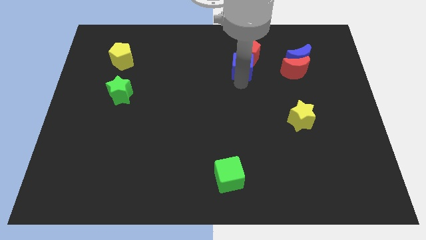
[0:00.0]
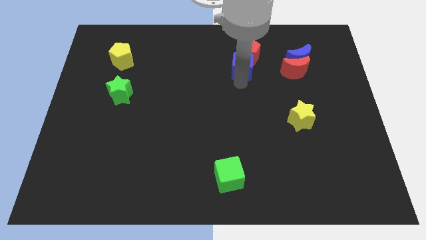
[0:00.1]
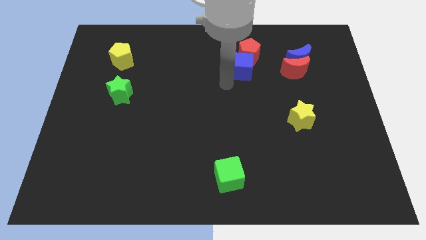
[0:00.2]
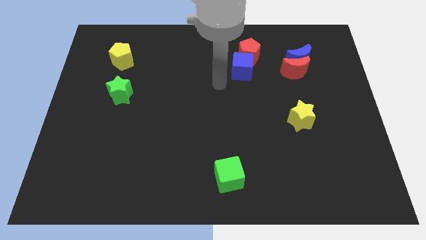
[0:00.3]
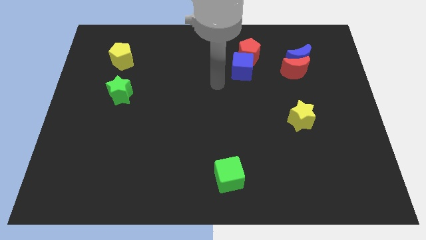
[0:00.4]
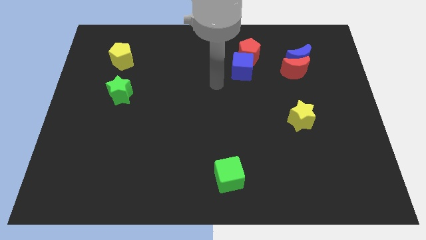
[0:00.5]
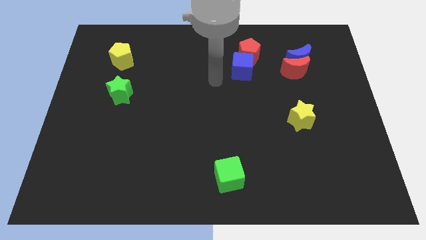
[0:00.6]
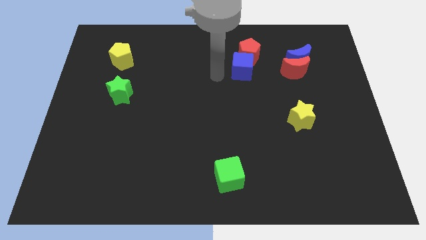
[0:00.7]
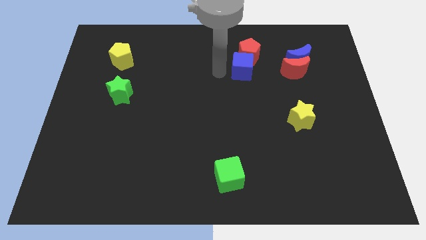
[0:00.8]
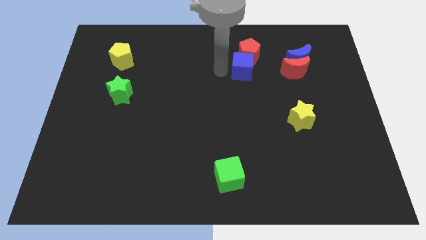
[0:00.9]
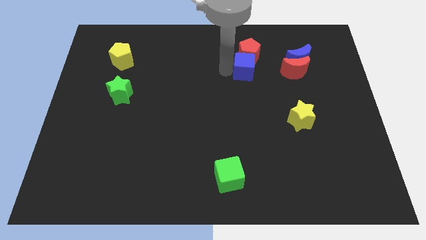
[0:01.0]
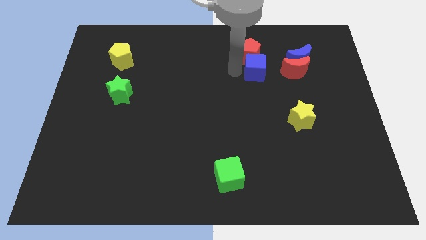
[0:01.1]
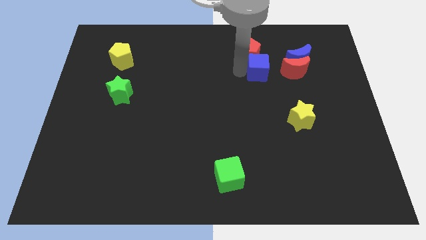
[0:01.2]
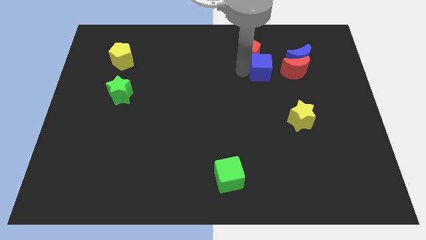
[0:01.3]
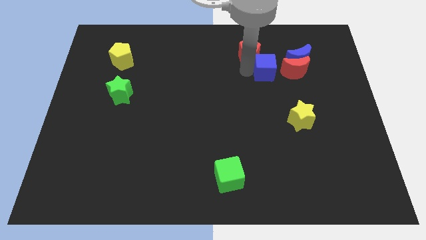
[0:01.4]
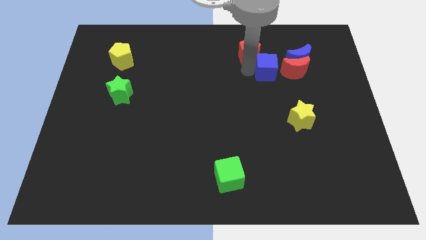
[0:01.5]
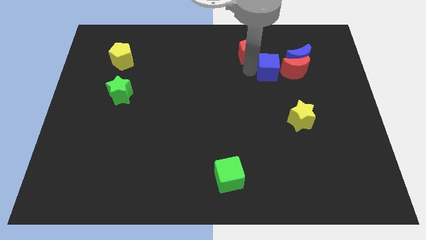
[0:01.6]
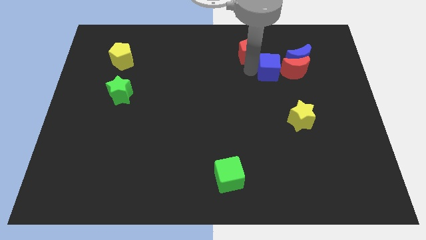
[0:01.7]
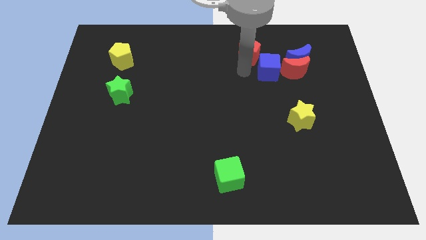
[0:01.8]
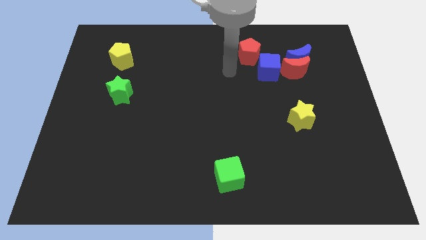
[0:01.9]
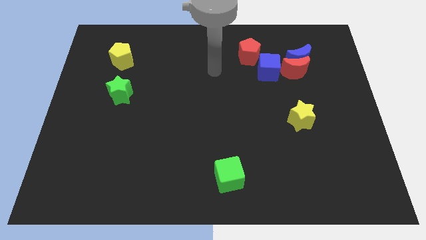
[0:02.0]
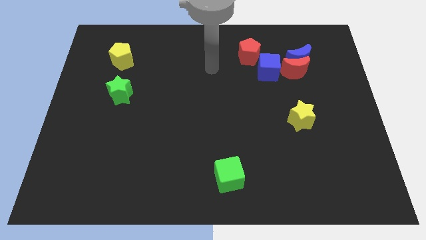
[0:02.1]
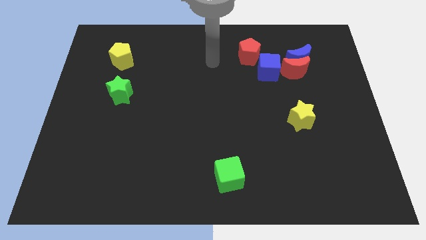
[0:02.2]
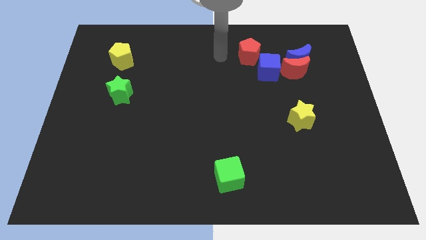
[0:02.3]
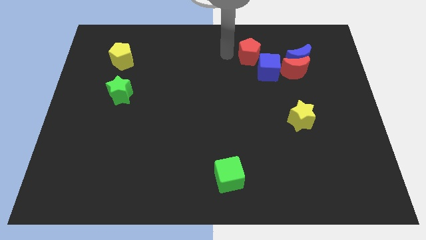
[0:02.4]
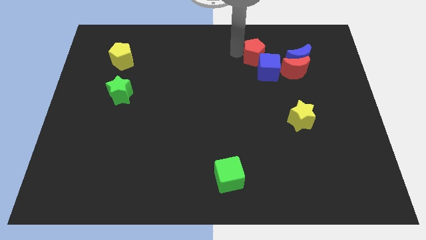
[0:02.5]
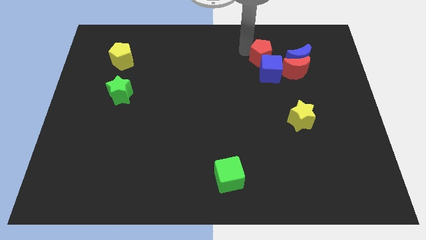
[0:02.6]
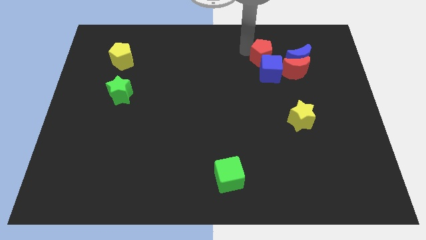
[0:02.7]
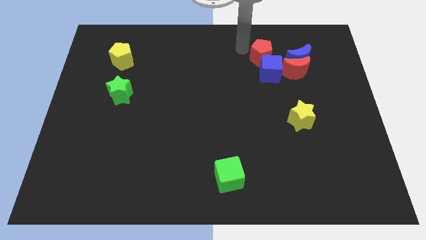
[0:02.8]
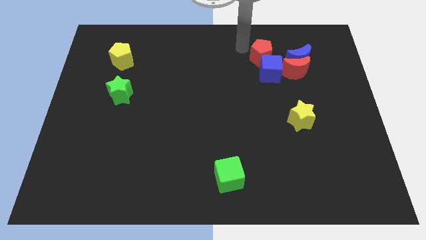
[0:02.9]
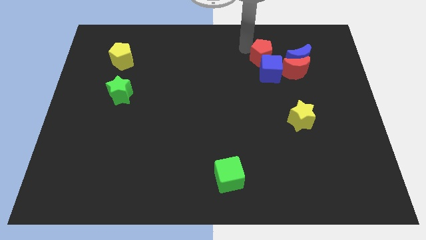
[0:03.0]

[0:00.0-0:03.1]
slide the blue cube to the left of the red moon

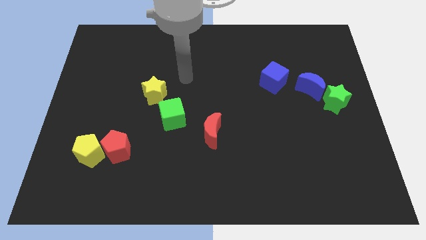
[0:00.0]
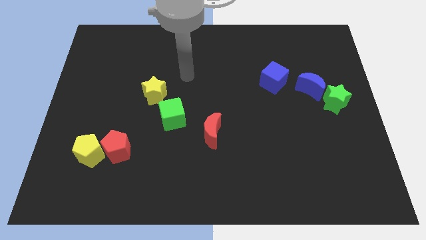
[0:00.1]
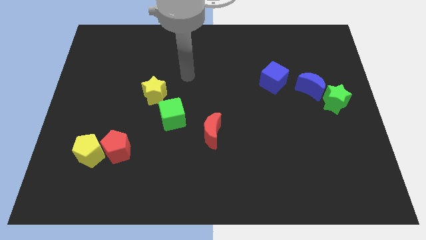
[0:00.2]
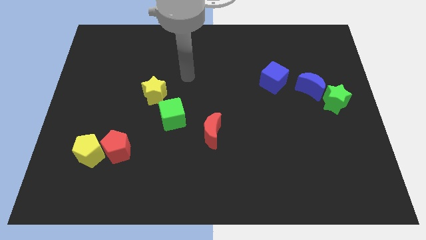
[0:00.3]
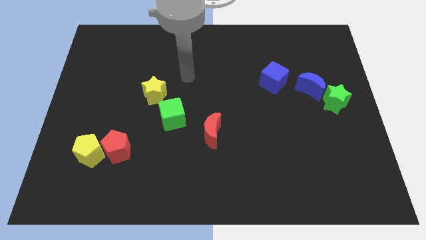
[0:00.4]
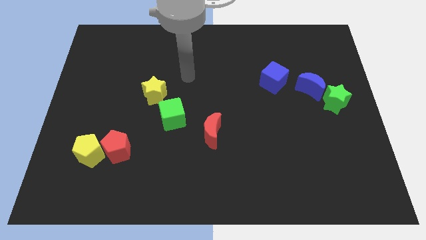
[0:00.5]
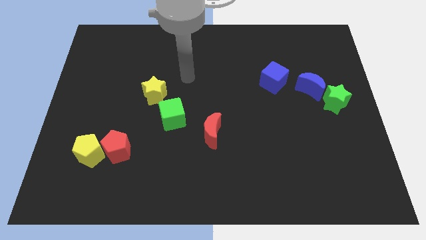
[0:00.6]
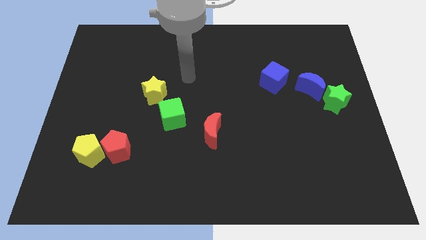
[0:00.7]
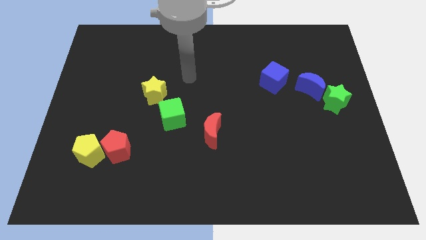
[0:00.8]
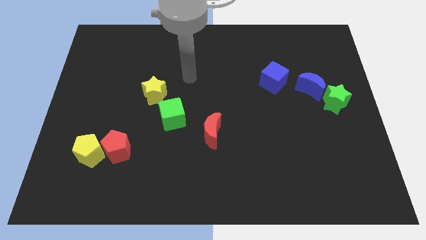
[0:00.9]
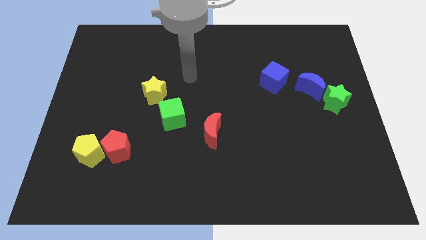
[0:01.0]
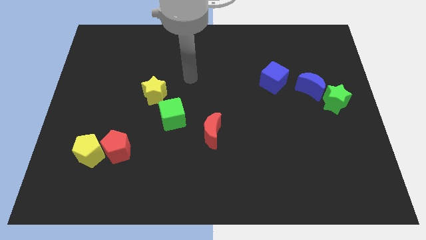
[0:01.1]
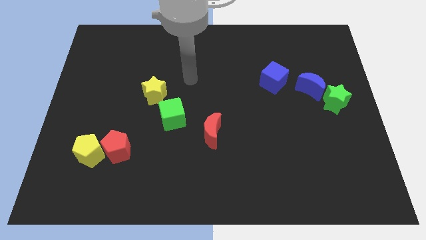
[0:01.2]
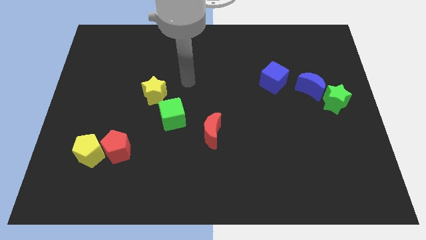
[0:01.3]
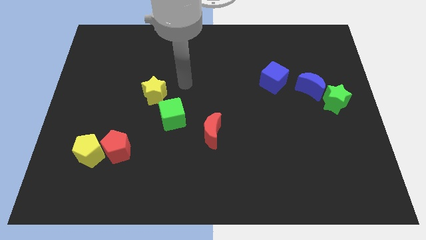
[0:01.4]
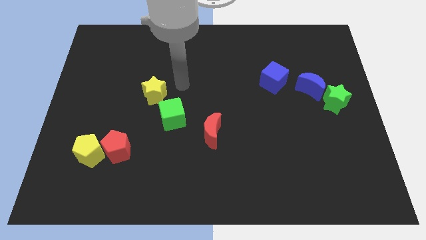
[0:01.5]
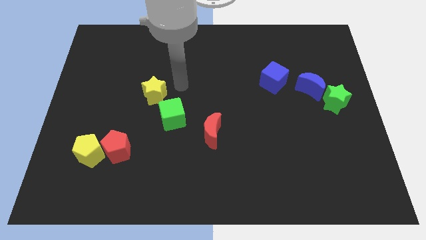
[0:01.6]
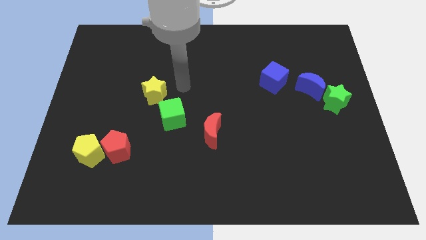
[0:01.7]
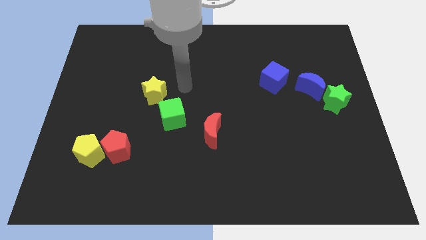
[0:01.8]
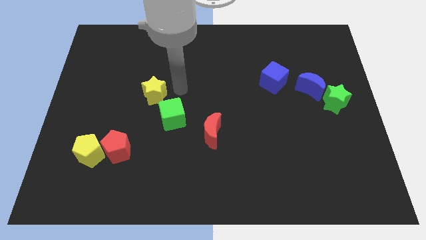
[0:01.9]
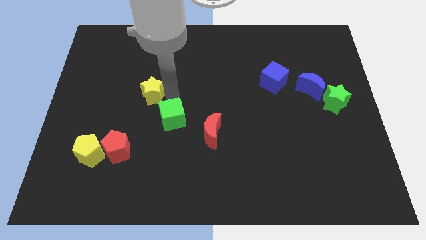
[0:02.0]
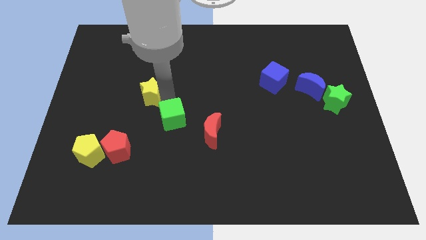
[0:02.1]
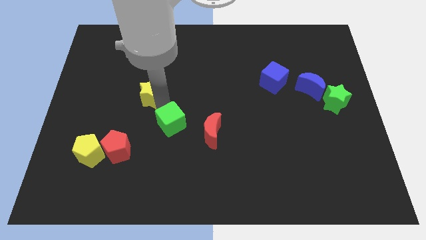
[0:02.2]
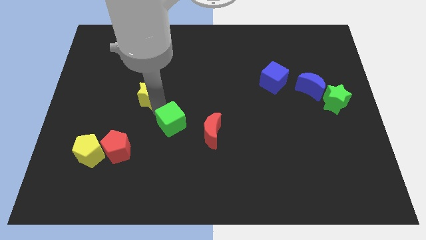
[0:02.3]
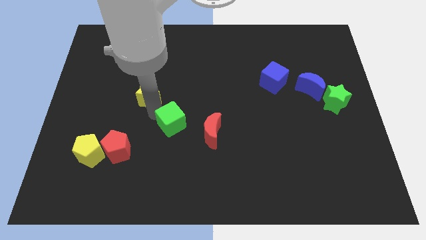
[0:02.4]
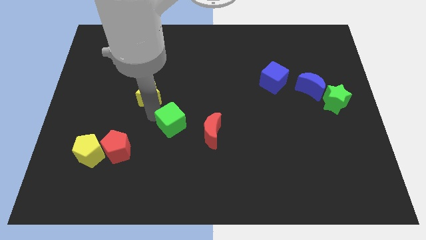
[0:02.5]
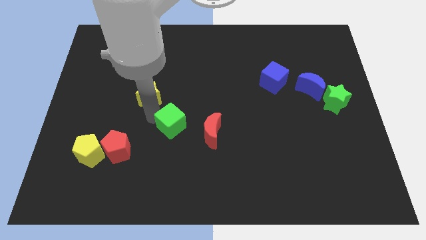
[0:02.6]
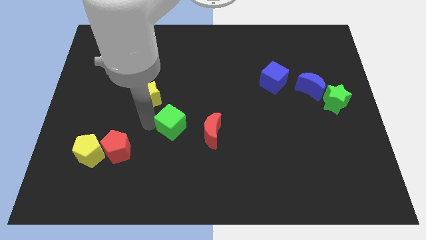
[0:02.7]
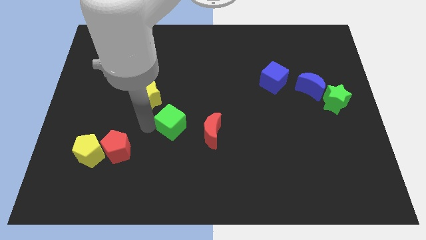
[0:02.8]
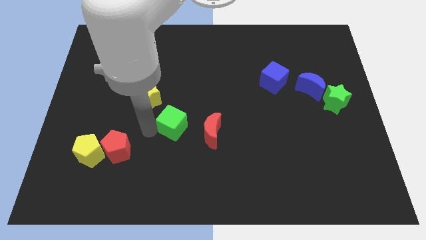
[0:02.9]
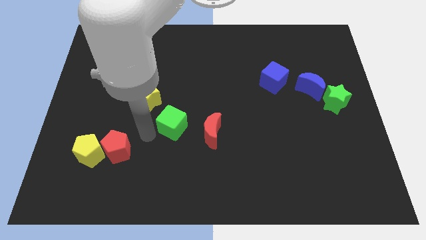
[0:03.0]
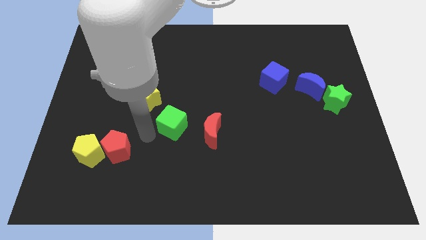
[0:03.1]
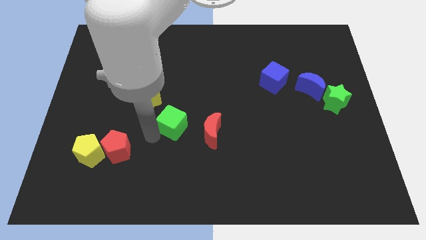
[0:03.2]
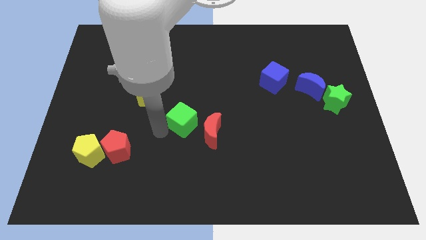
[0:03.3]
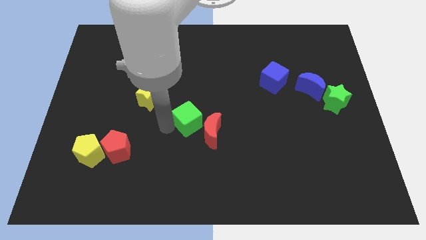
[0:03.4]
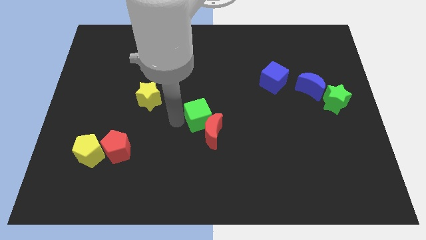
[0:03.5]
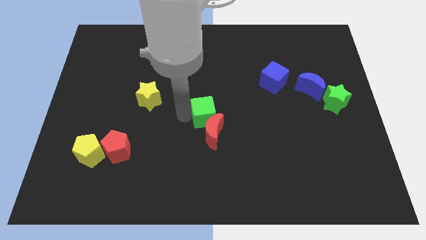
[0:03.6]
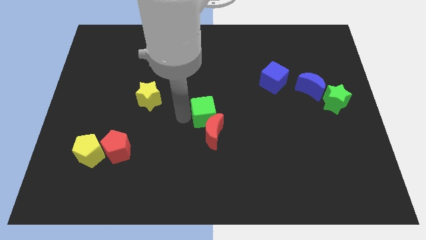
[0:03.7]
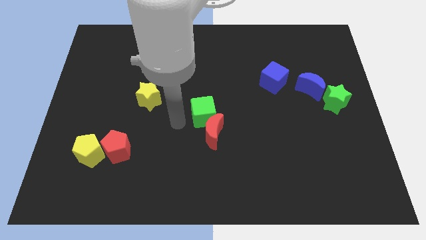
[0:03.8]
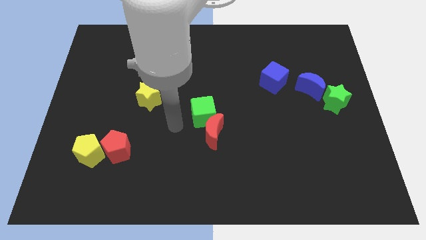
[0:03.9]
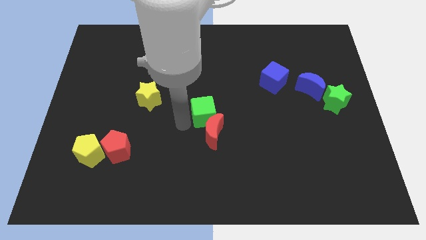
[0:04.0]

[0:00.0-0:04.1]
separate the yellow star and green cube

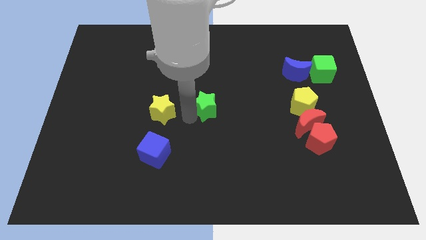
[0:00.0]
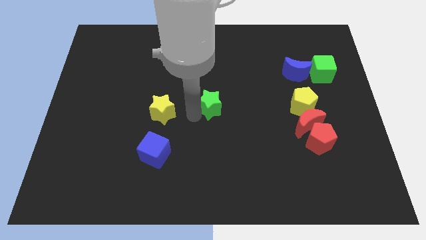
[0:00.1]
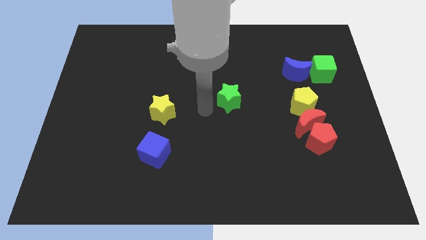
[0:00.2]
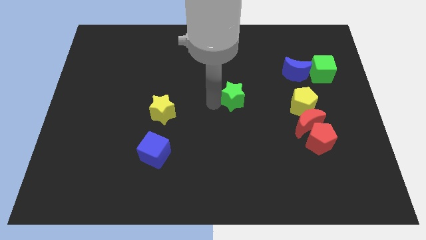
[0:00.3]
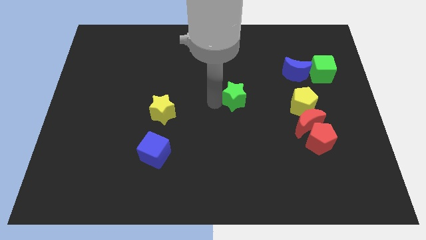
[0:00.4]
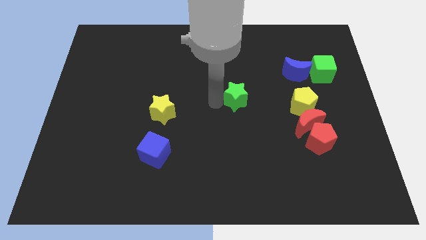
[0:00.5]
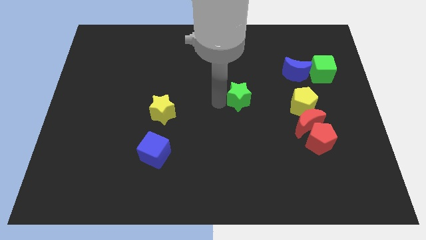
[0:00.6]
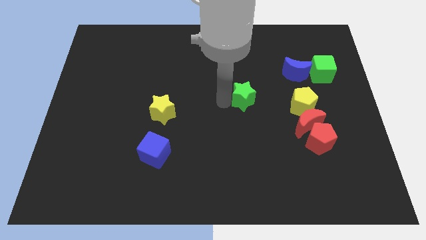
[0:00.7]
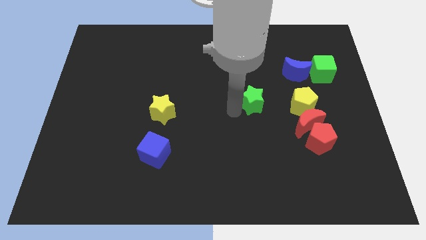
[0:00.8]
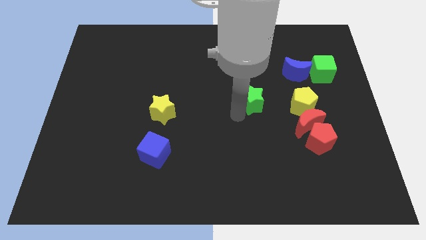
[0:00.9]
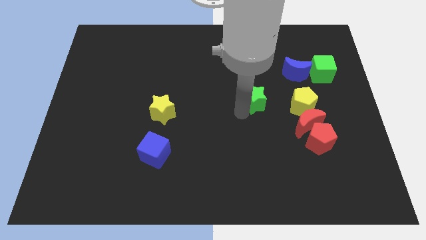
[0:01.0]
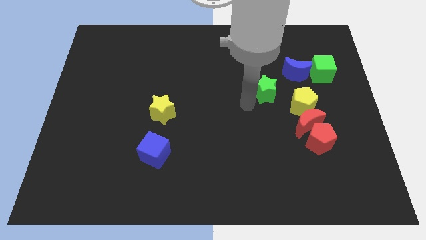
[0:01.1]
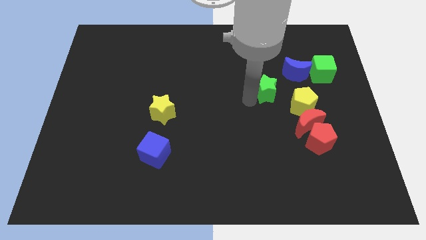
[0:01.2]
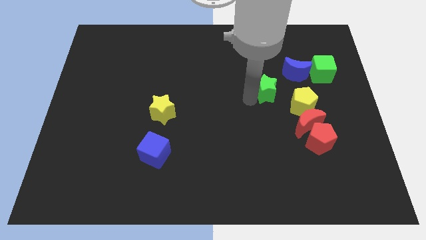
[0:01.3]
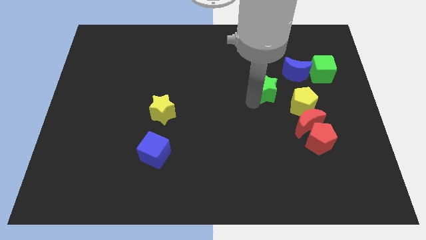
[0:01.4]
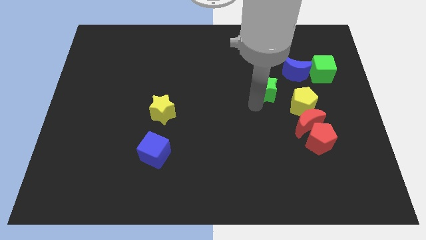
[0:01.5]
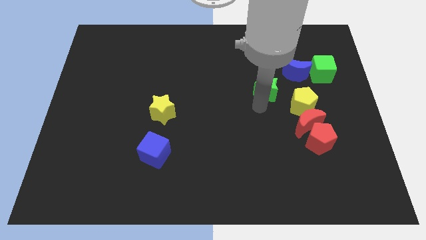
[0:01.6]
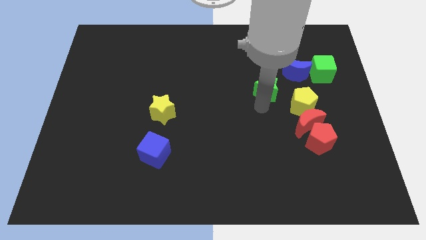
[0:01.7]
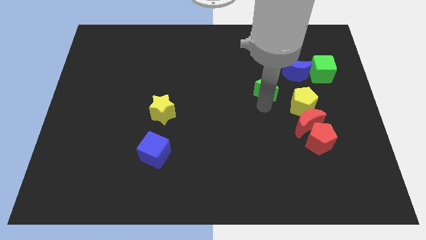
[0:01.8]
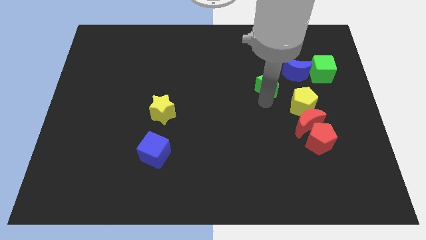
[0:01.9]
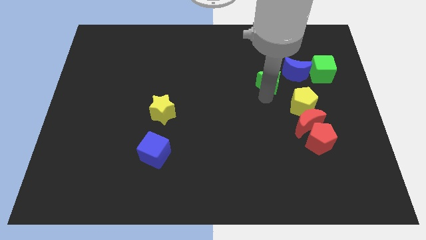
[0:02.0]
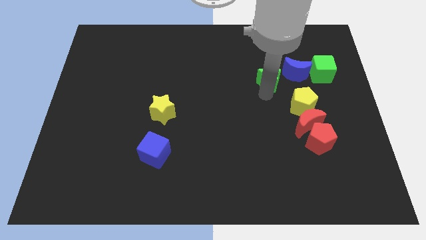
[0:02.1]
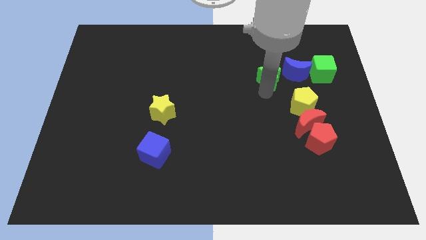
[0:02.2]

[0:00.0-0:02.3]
place the green star close to blue crescent
